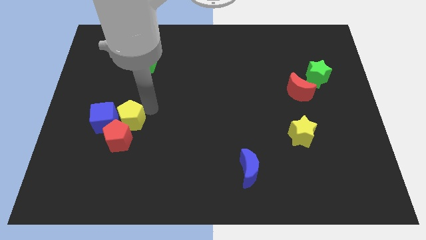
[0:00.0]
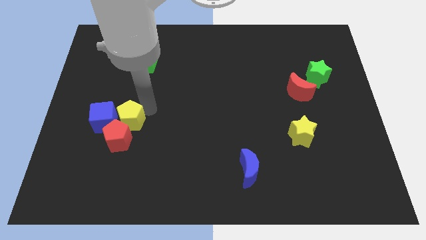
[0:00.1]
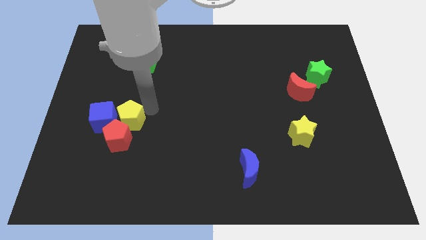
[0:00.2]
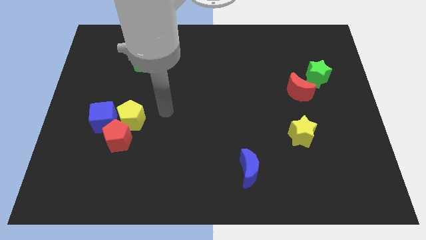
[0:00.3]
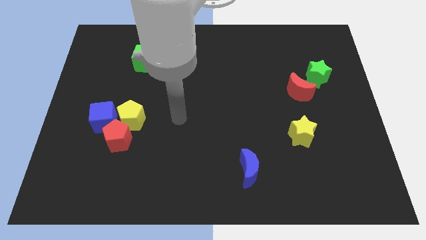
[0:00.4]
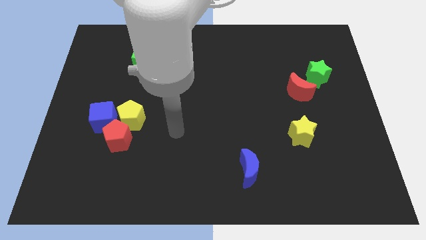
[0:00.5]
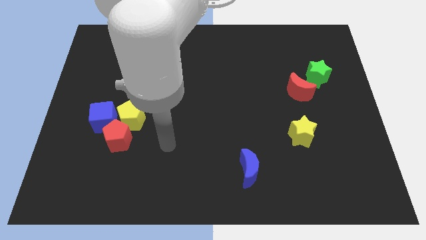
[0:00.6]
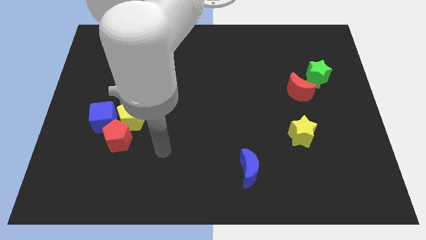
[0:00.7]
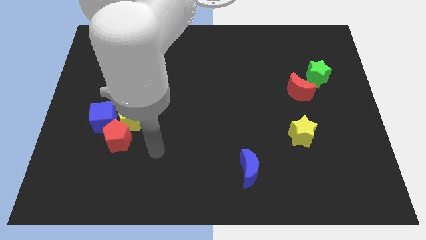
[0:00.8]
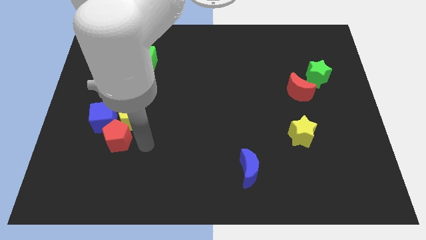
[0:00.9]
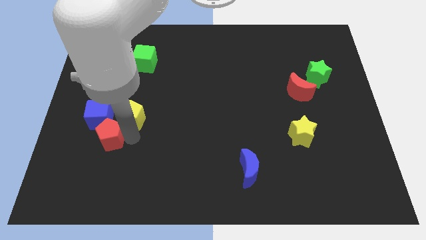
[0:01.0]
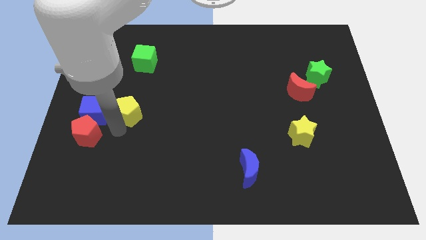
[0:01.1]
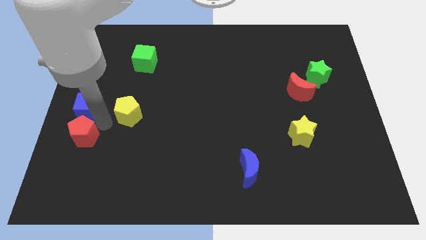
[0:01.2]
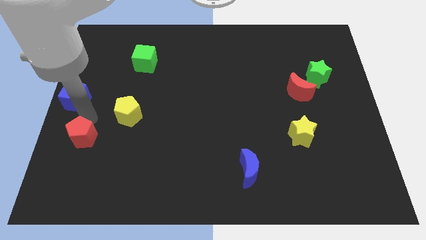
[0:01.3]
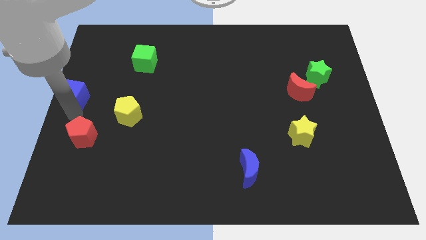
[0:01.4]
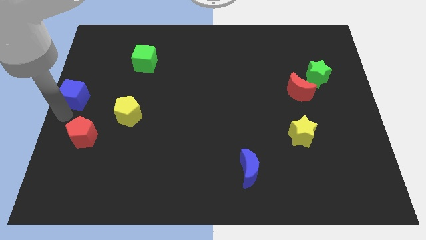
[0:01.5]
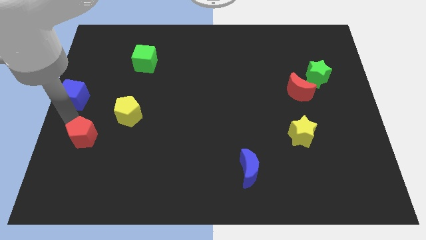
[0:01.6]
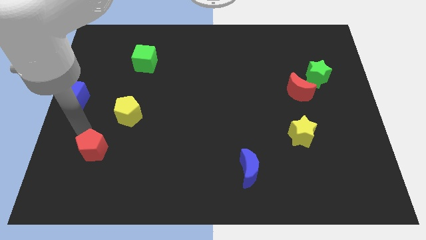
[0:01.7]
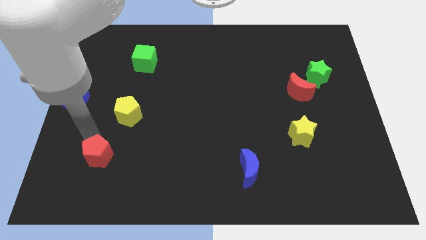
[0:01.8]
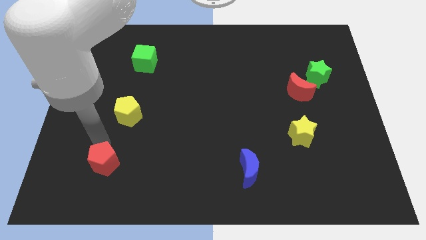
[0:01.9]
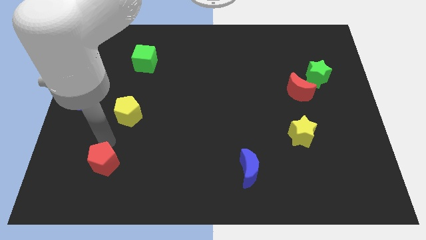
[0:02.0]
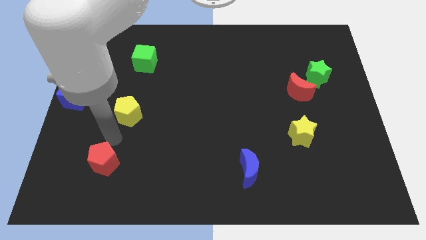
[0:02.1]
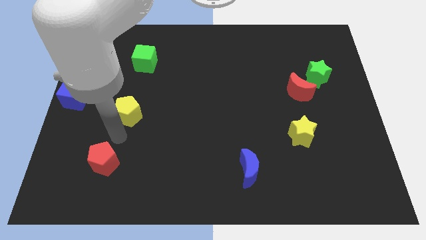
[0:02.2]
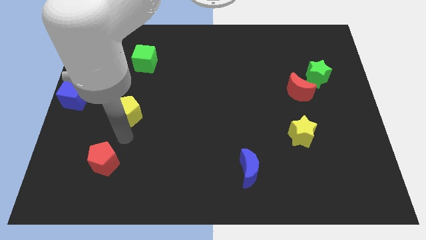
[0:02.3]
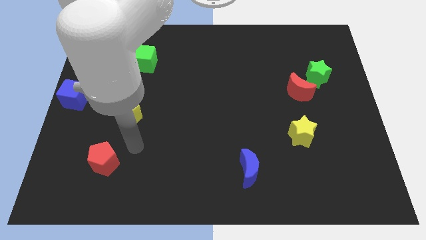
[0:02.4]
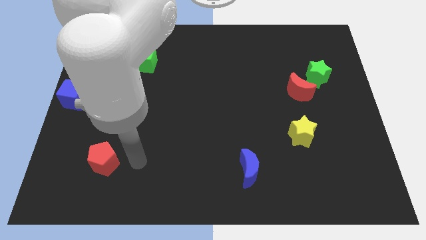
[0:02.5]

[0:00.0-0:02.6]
separate the blue cube red pentagon and yellow pentagon

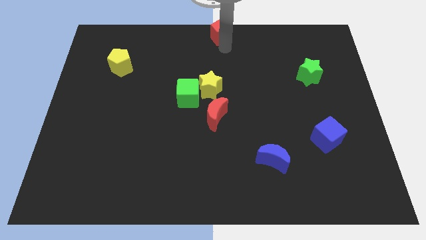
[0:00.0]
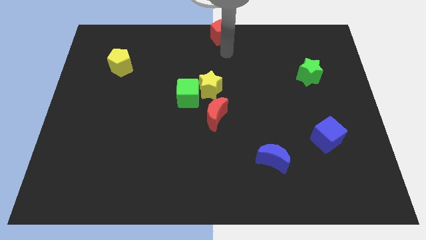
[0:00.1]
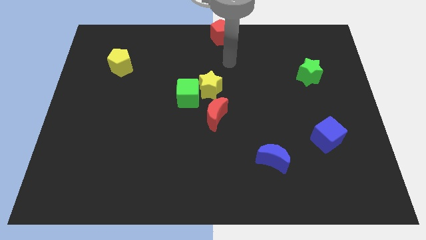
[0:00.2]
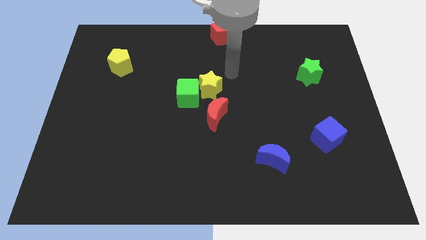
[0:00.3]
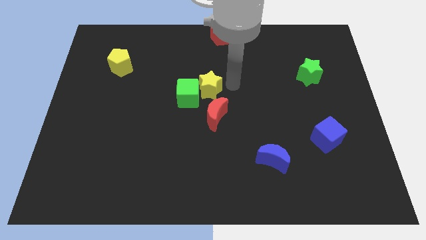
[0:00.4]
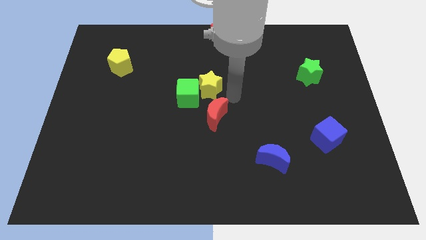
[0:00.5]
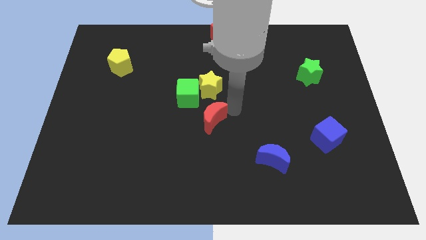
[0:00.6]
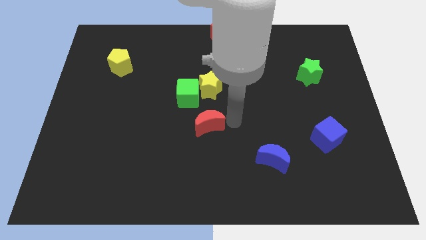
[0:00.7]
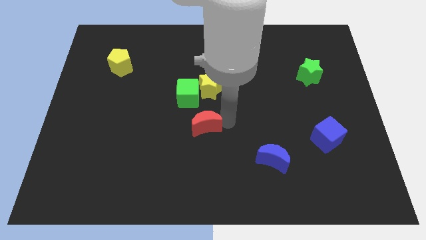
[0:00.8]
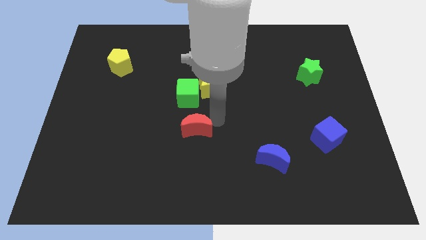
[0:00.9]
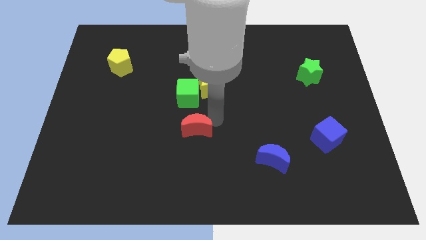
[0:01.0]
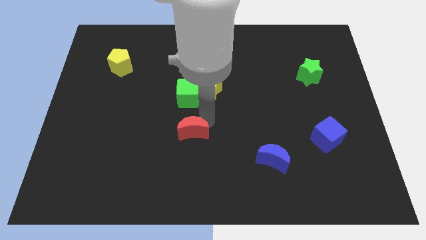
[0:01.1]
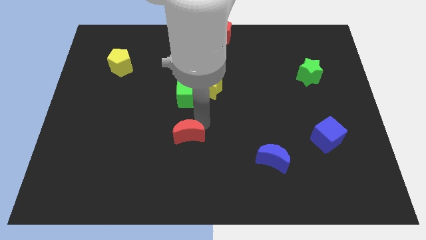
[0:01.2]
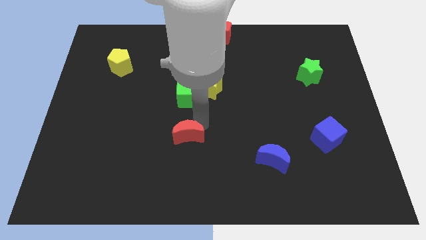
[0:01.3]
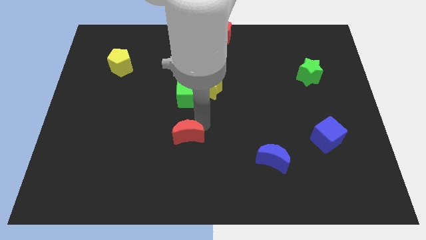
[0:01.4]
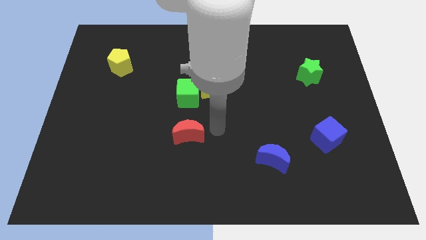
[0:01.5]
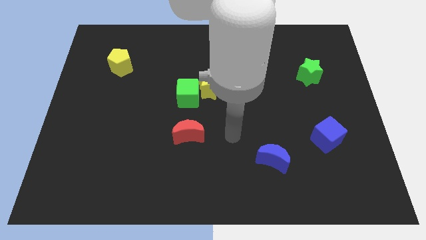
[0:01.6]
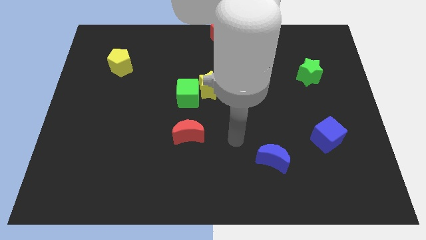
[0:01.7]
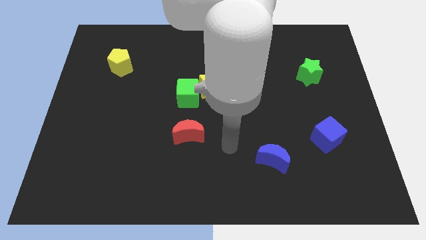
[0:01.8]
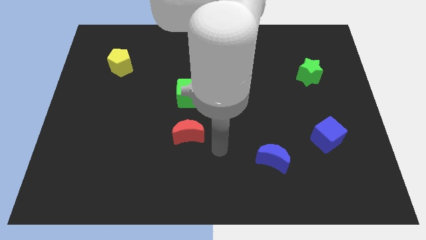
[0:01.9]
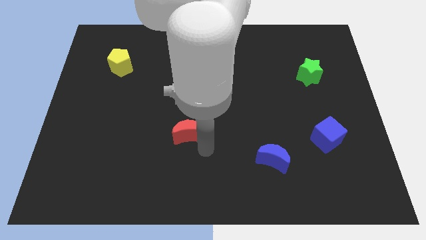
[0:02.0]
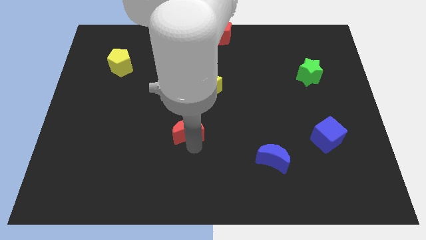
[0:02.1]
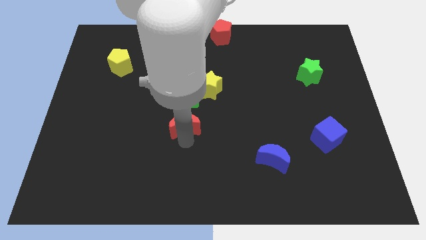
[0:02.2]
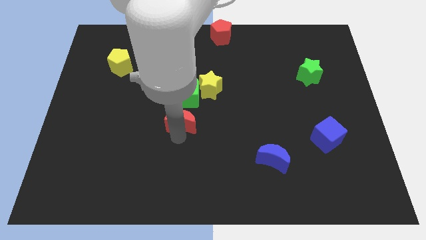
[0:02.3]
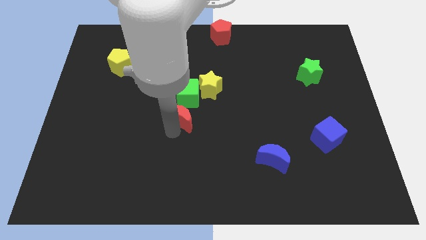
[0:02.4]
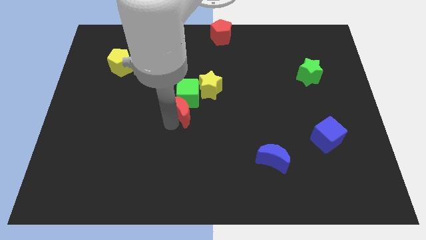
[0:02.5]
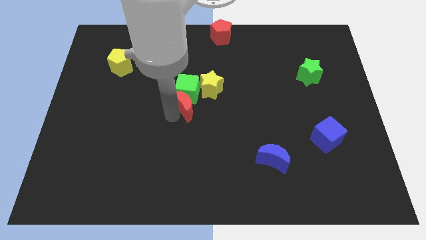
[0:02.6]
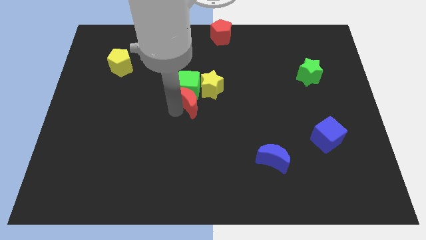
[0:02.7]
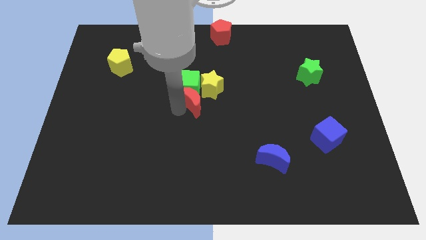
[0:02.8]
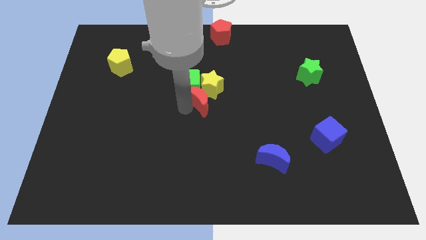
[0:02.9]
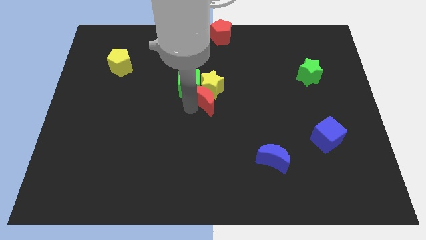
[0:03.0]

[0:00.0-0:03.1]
move the red crescent into the green cube

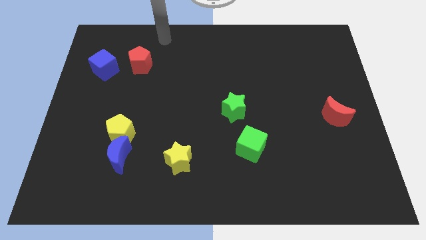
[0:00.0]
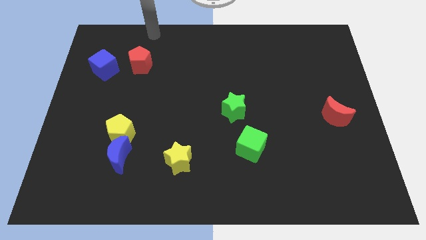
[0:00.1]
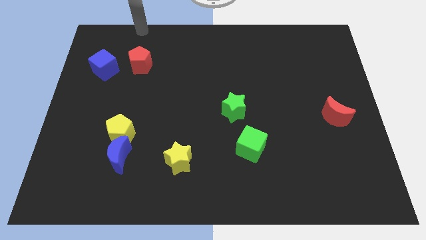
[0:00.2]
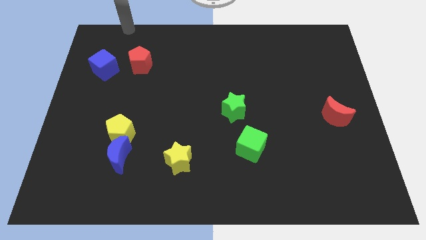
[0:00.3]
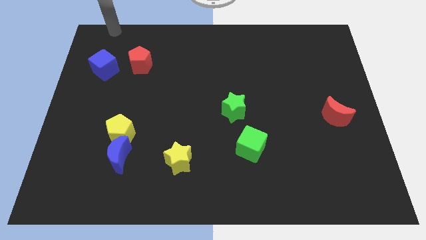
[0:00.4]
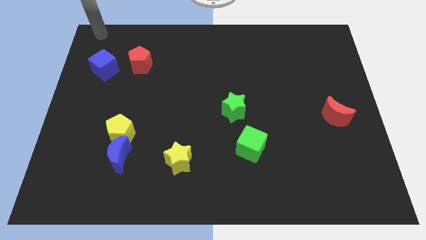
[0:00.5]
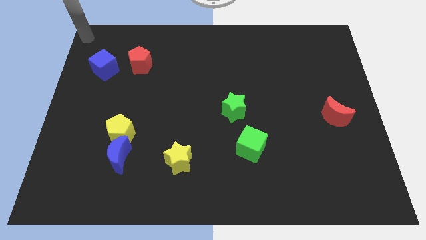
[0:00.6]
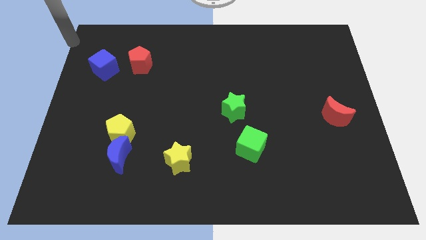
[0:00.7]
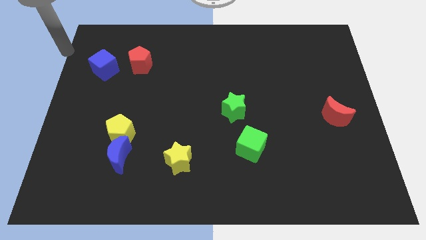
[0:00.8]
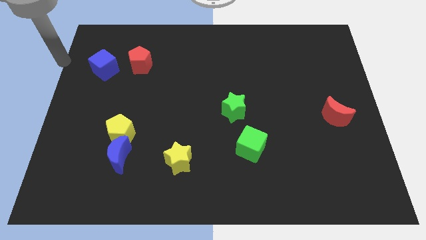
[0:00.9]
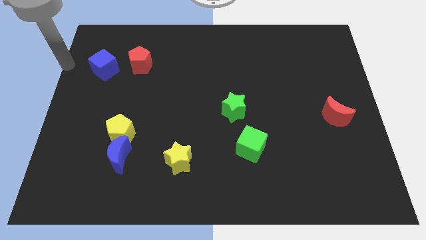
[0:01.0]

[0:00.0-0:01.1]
place your arm at the left of the blue cube

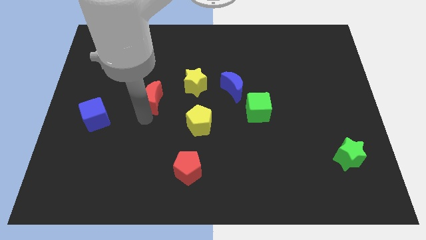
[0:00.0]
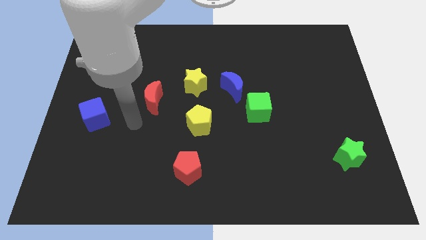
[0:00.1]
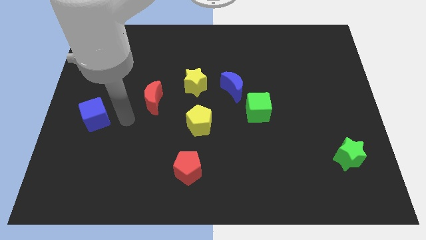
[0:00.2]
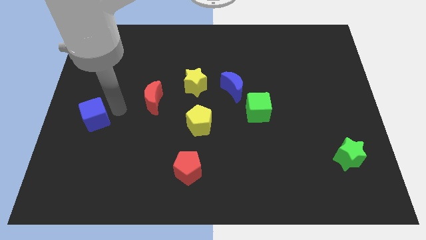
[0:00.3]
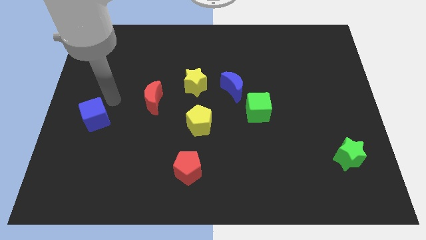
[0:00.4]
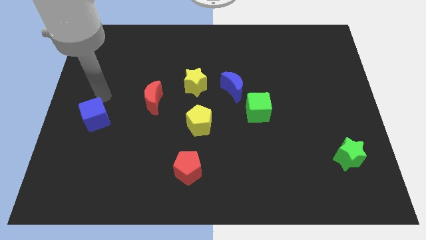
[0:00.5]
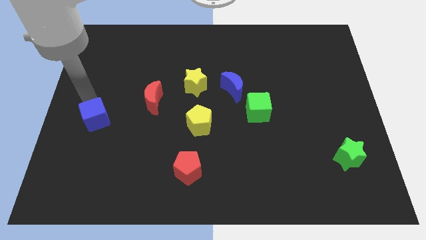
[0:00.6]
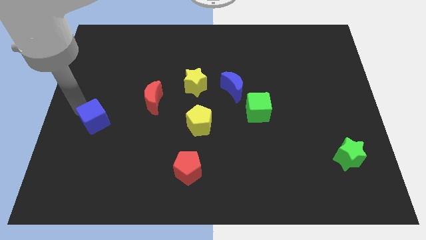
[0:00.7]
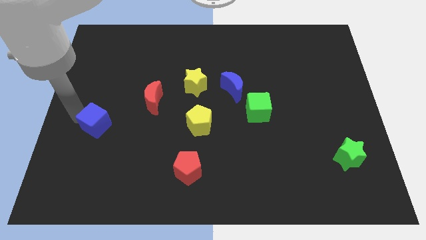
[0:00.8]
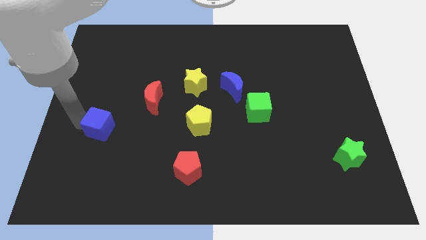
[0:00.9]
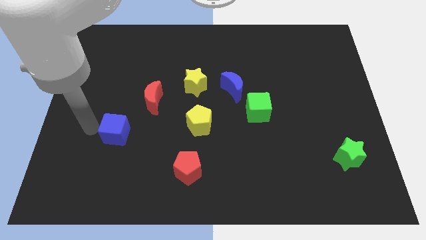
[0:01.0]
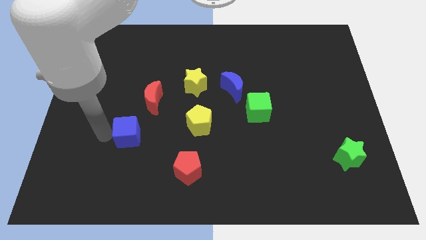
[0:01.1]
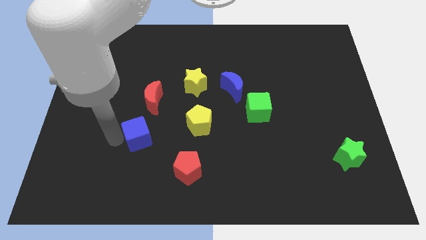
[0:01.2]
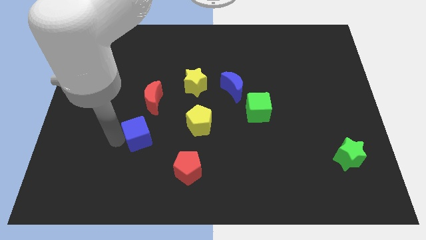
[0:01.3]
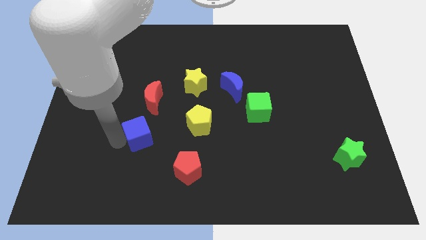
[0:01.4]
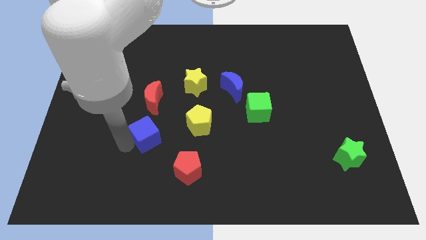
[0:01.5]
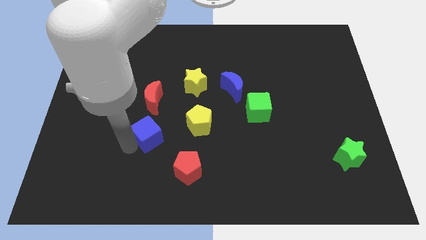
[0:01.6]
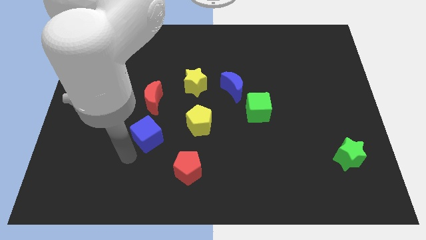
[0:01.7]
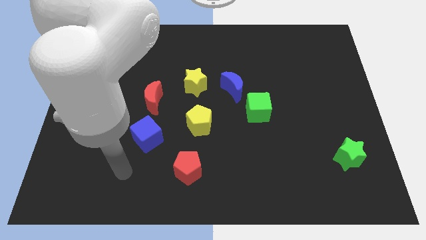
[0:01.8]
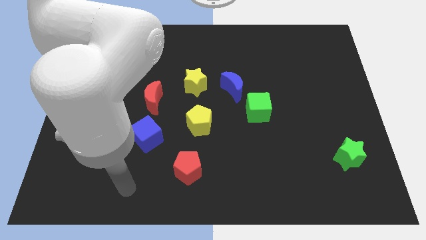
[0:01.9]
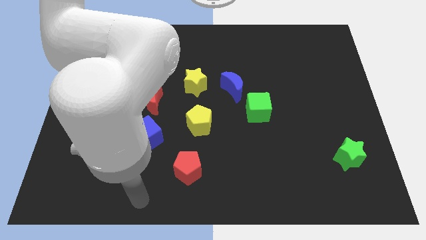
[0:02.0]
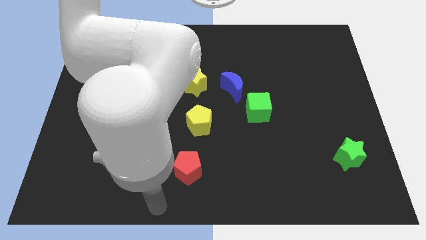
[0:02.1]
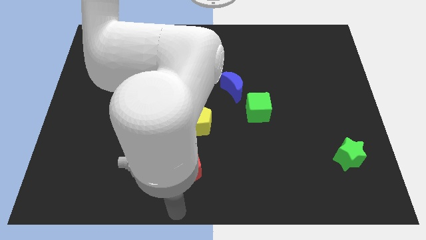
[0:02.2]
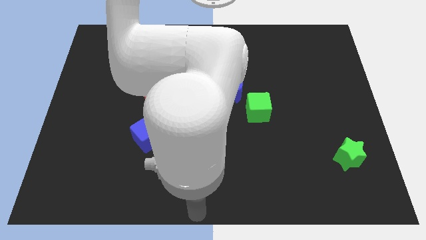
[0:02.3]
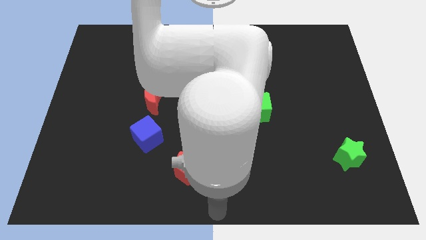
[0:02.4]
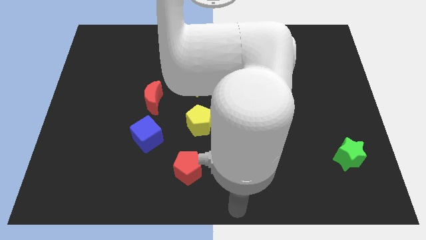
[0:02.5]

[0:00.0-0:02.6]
push the blue cube towards the center
